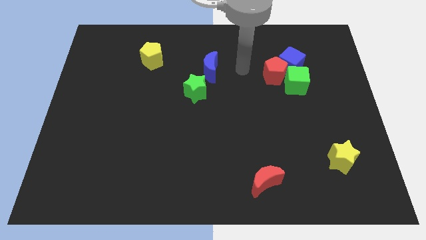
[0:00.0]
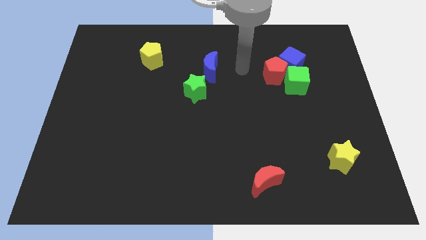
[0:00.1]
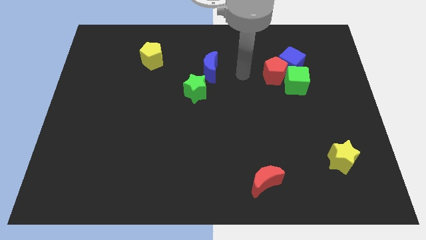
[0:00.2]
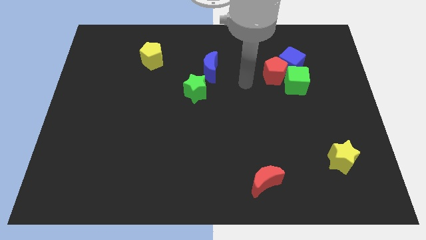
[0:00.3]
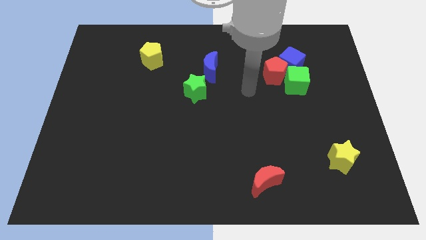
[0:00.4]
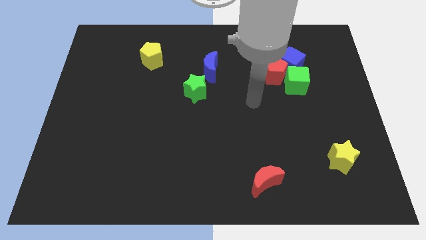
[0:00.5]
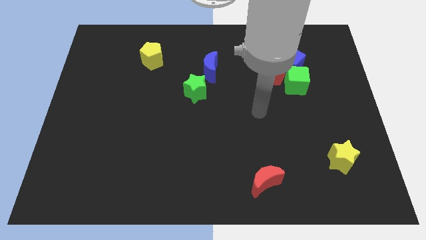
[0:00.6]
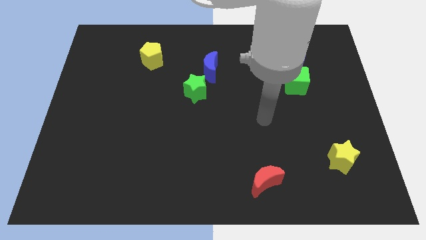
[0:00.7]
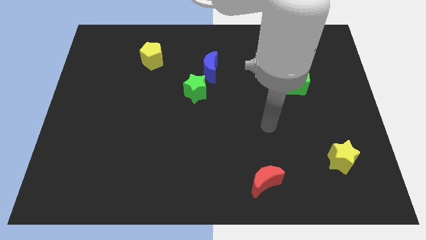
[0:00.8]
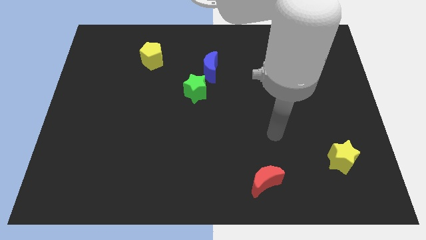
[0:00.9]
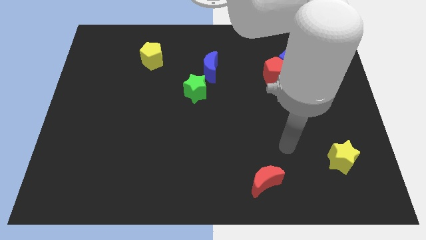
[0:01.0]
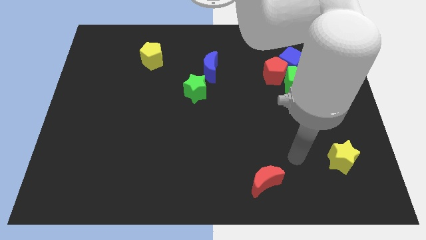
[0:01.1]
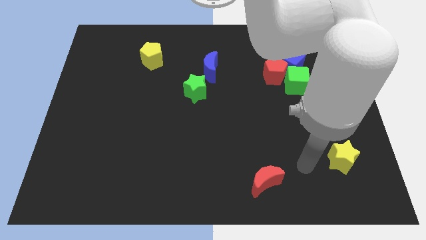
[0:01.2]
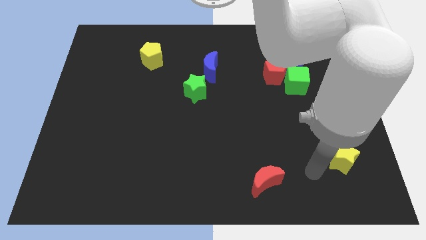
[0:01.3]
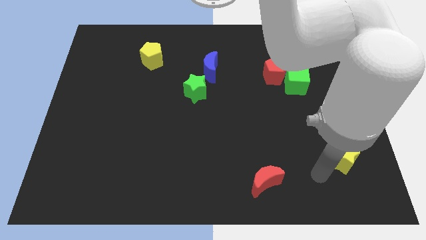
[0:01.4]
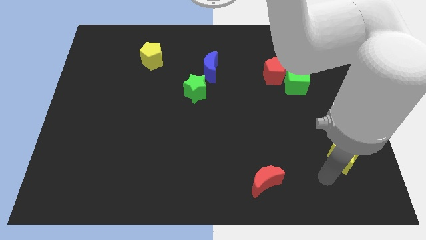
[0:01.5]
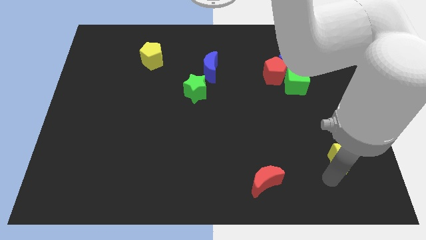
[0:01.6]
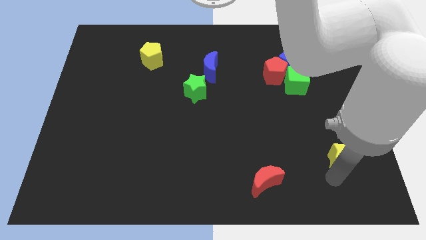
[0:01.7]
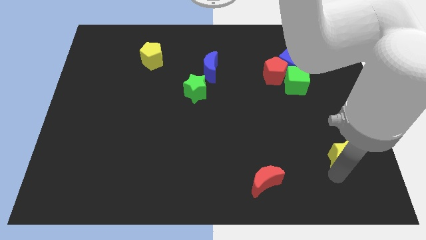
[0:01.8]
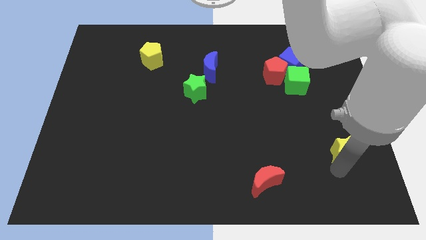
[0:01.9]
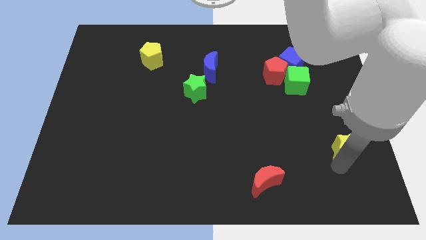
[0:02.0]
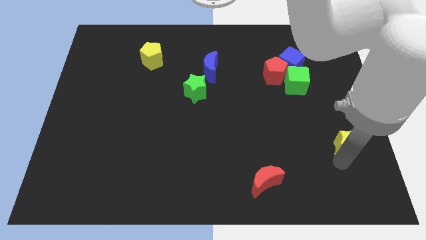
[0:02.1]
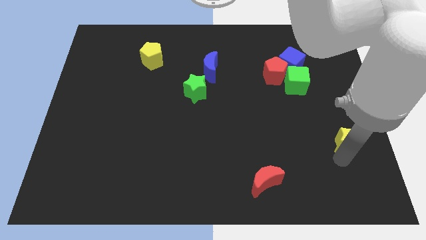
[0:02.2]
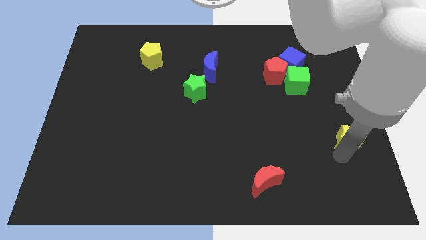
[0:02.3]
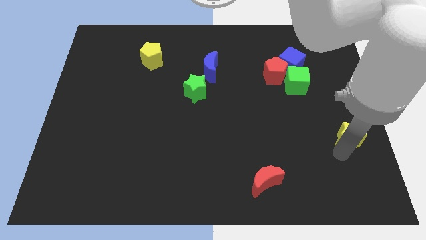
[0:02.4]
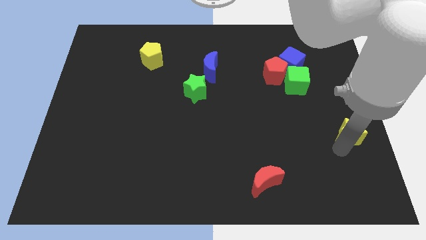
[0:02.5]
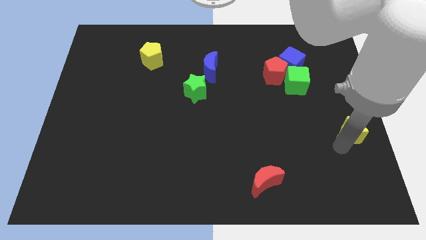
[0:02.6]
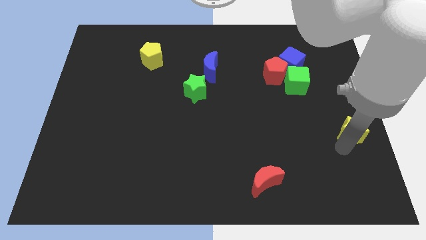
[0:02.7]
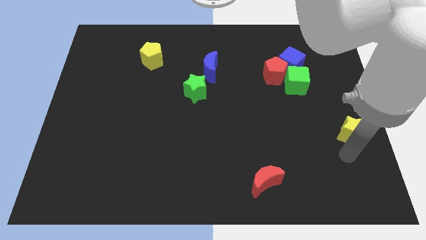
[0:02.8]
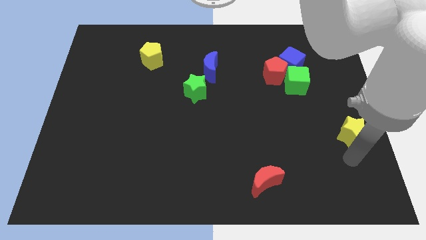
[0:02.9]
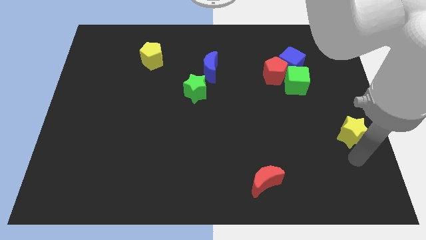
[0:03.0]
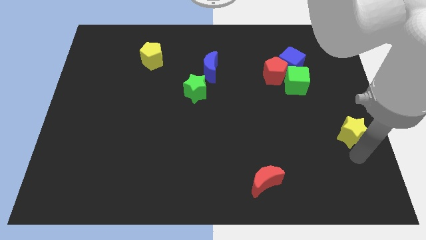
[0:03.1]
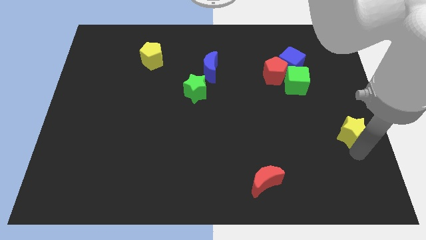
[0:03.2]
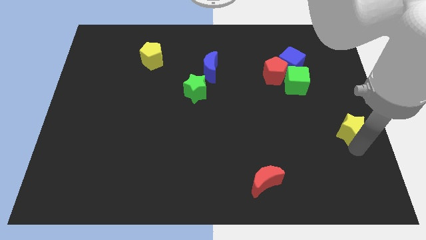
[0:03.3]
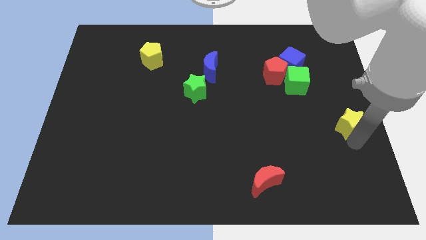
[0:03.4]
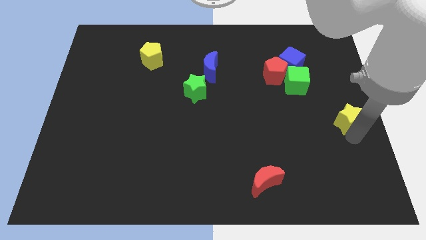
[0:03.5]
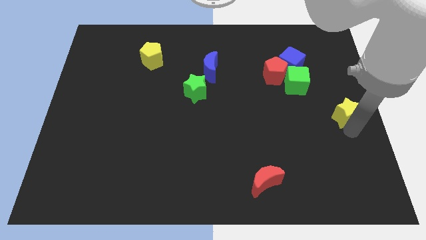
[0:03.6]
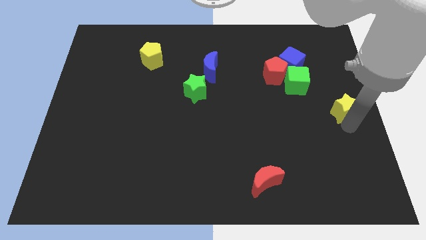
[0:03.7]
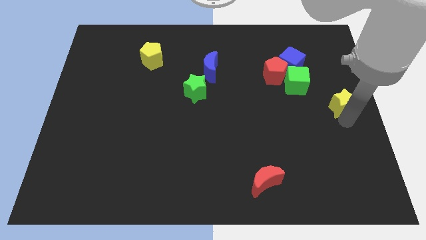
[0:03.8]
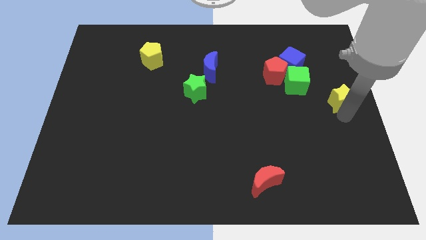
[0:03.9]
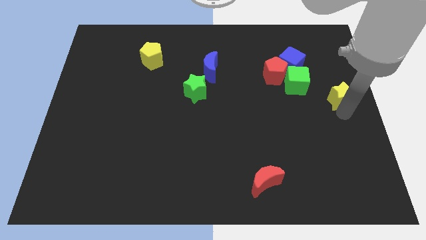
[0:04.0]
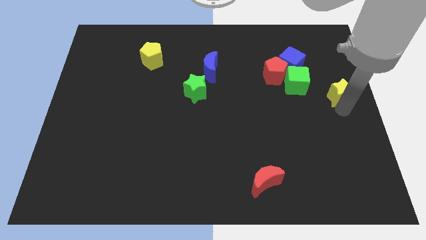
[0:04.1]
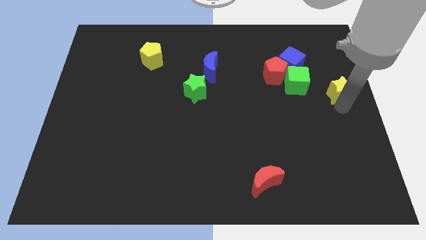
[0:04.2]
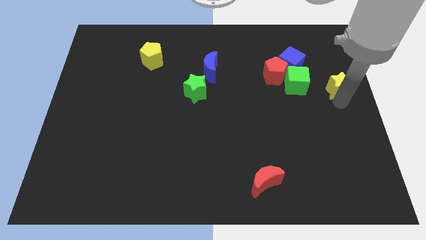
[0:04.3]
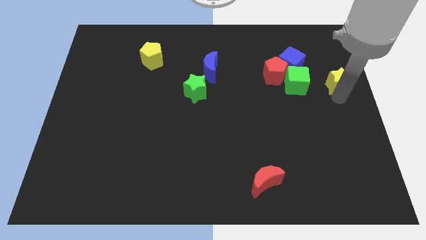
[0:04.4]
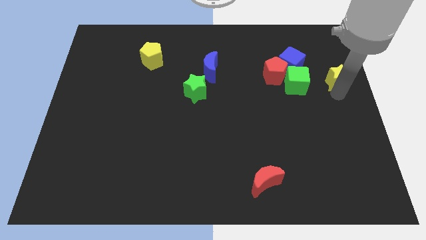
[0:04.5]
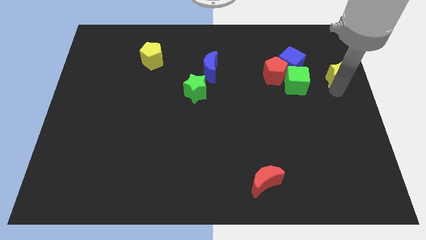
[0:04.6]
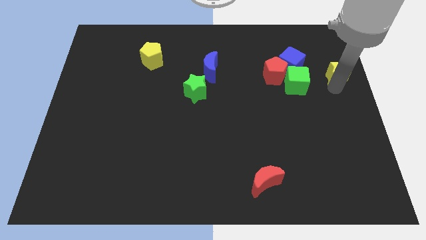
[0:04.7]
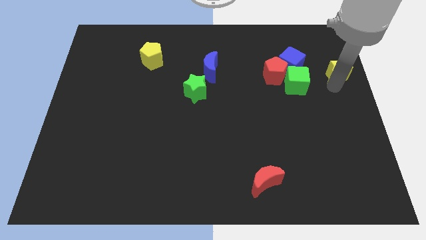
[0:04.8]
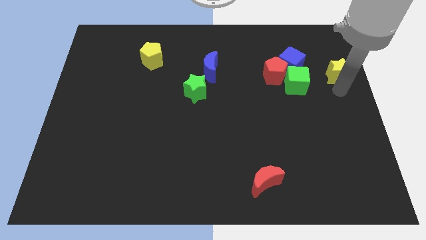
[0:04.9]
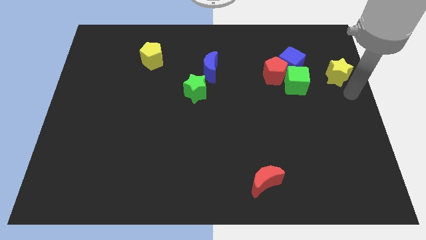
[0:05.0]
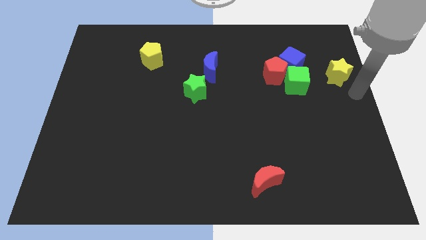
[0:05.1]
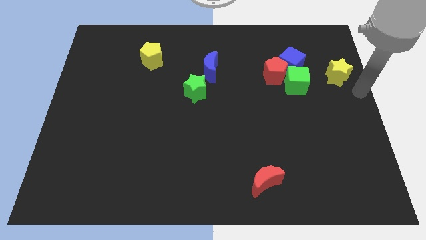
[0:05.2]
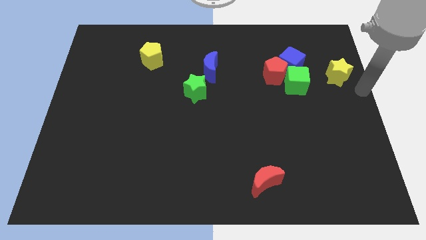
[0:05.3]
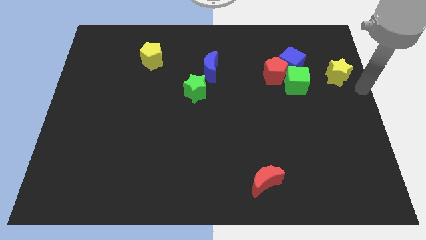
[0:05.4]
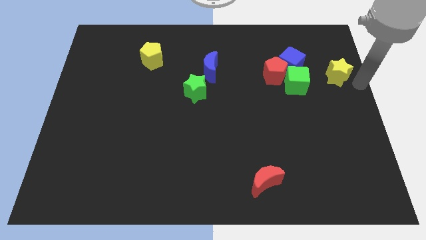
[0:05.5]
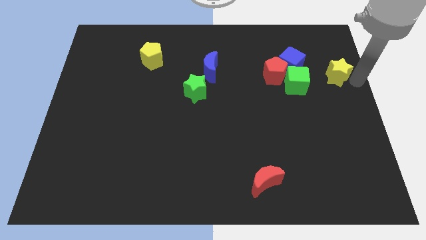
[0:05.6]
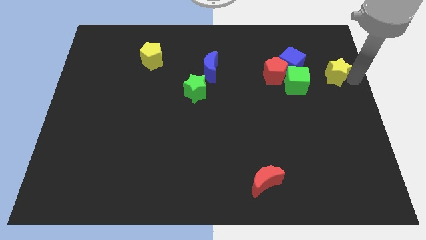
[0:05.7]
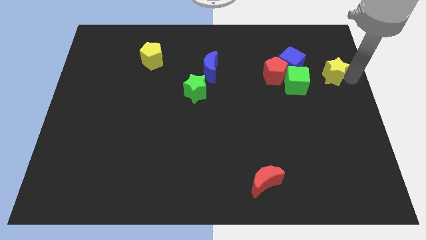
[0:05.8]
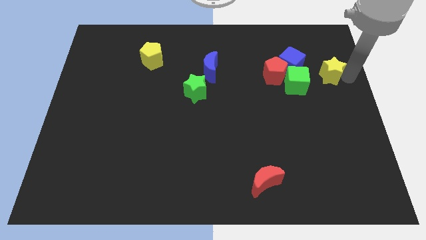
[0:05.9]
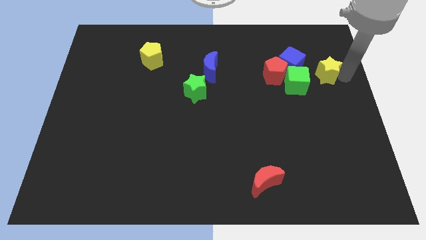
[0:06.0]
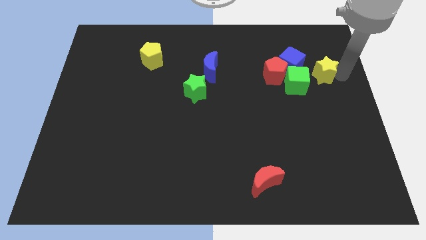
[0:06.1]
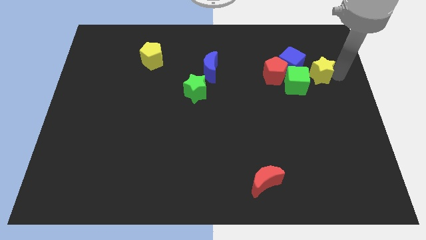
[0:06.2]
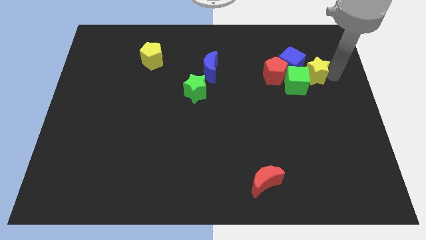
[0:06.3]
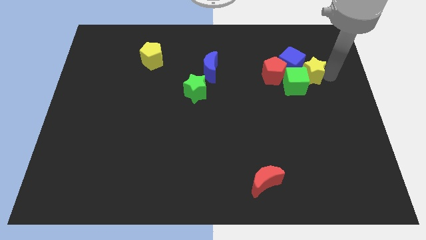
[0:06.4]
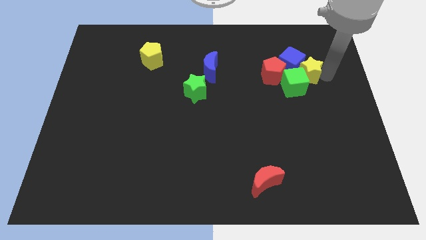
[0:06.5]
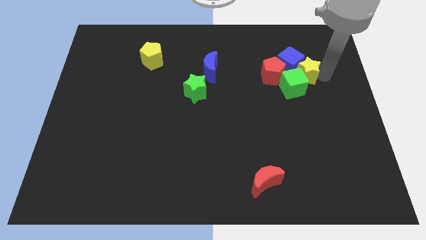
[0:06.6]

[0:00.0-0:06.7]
push the yellow star close to the blue cube

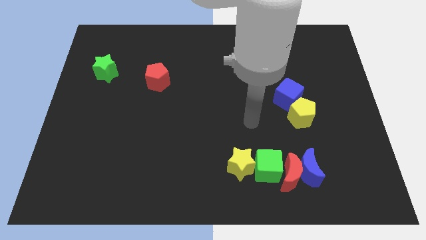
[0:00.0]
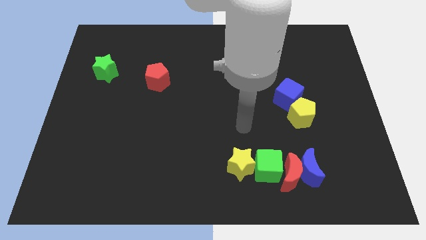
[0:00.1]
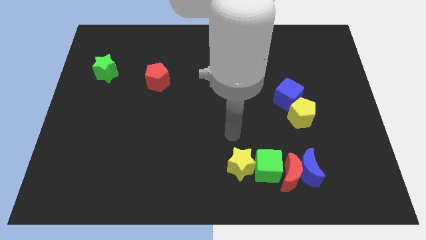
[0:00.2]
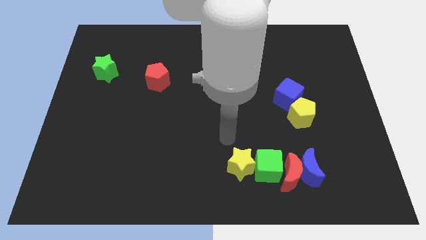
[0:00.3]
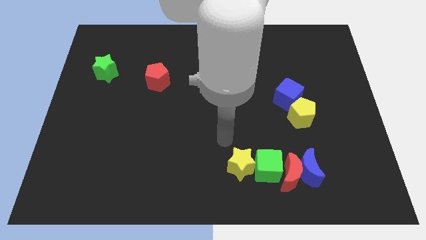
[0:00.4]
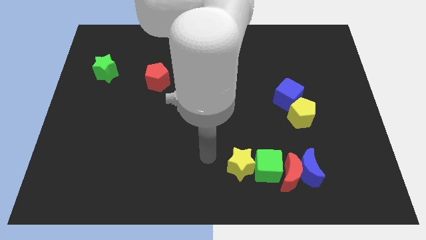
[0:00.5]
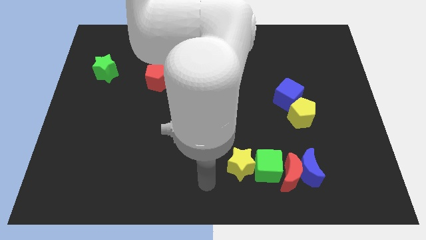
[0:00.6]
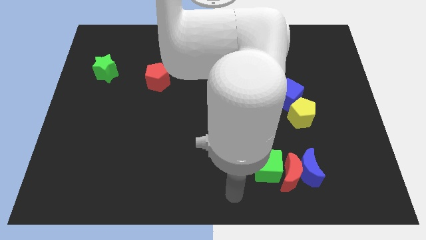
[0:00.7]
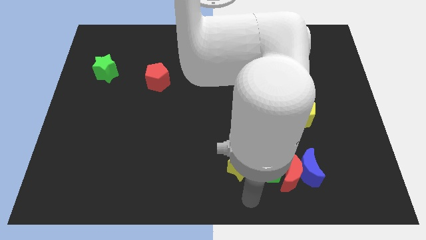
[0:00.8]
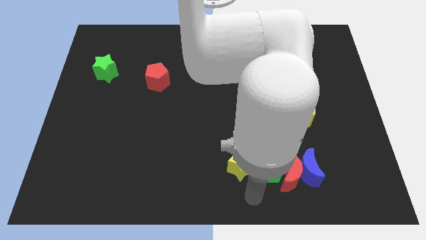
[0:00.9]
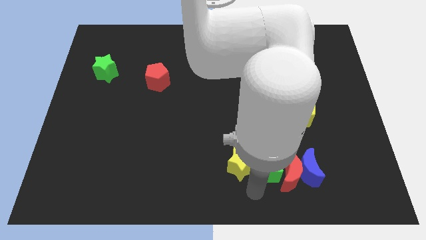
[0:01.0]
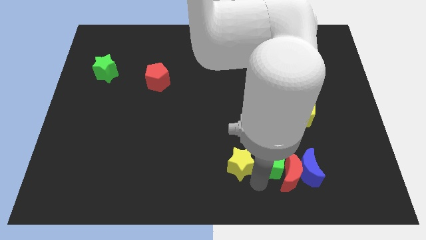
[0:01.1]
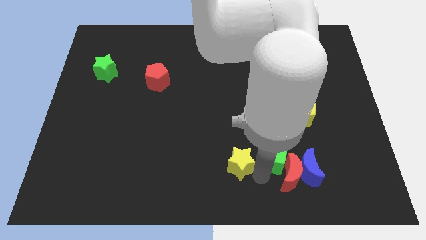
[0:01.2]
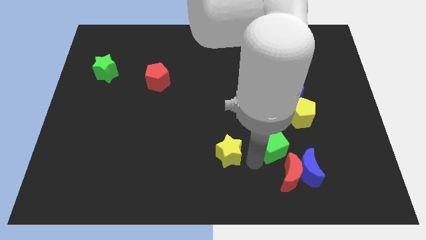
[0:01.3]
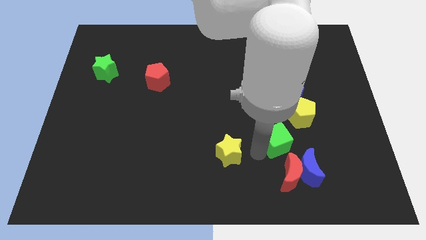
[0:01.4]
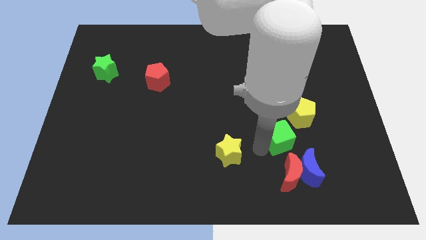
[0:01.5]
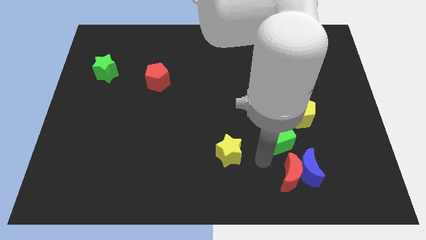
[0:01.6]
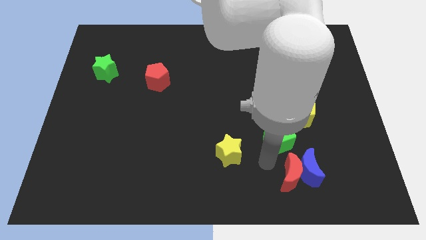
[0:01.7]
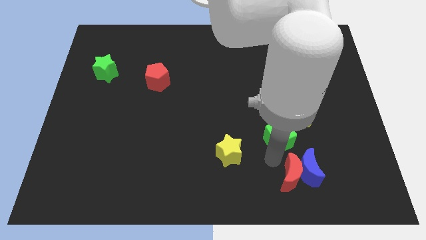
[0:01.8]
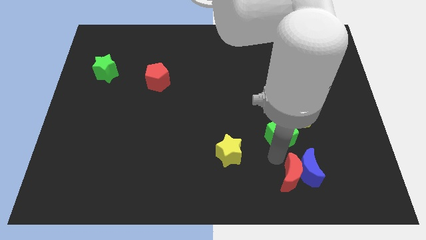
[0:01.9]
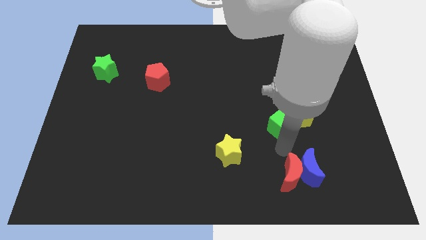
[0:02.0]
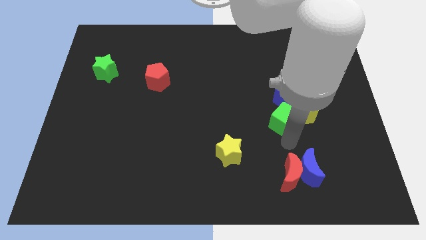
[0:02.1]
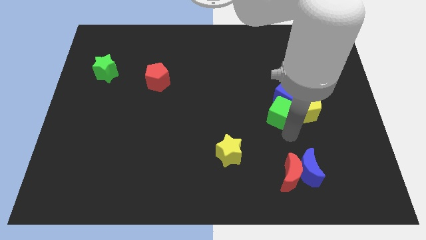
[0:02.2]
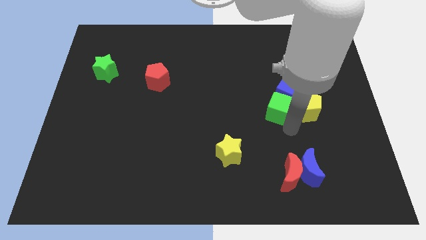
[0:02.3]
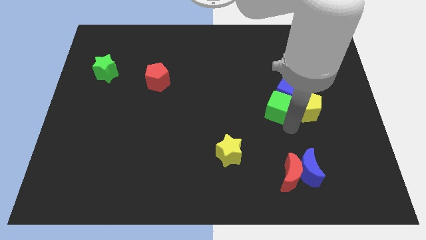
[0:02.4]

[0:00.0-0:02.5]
put the green cube next to the blue cube
